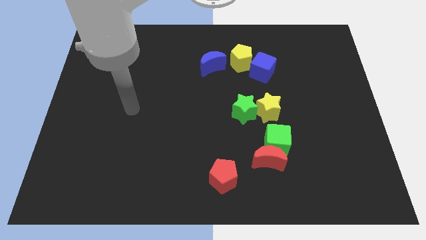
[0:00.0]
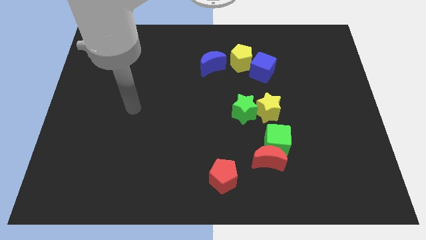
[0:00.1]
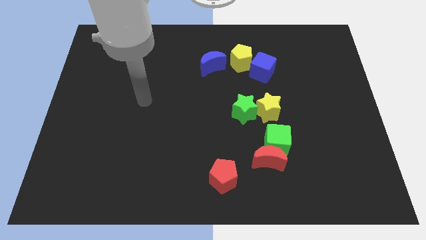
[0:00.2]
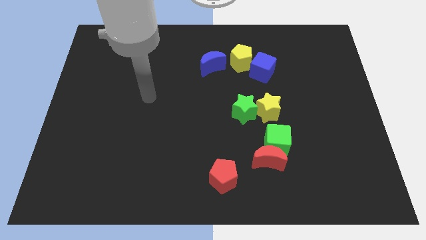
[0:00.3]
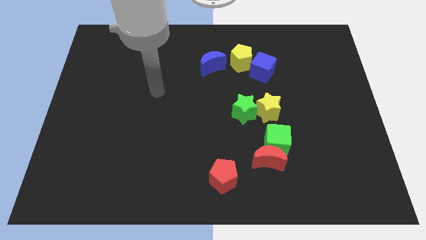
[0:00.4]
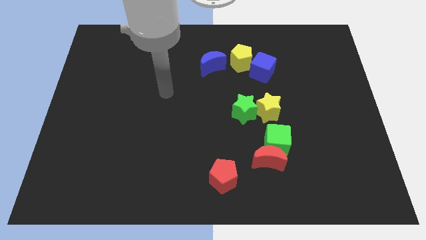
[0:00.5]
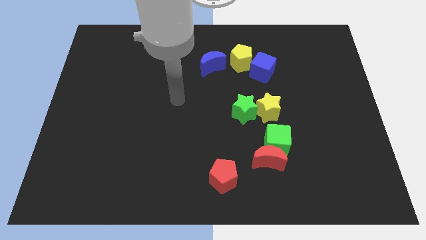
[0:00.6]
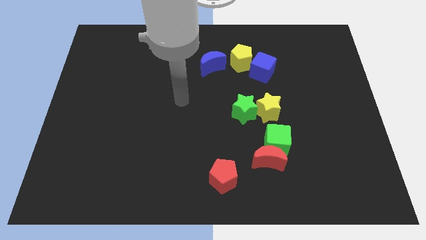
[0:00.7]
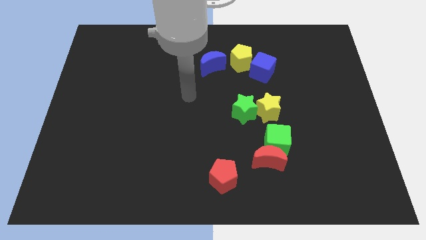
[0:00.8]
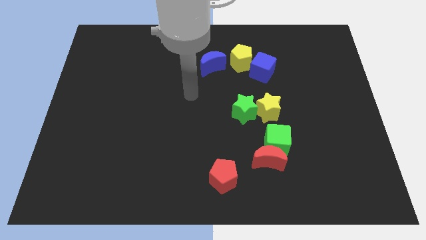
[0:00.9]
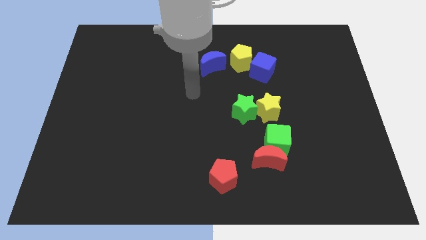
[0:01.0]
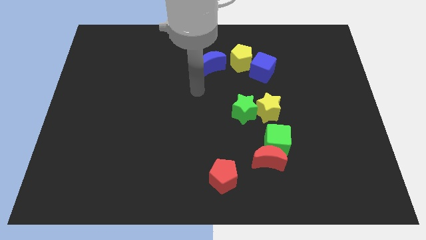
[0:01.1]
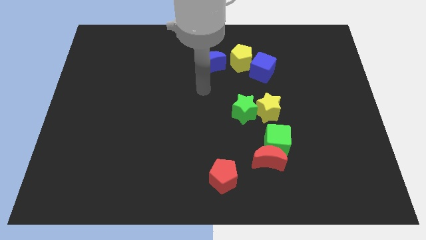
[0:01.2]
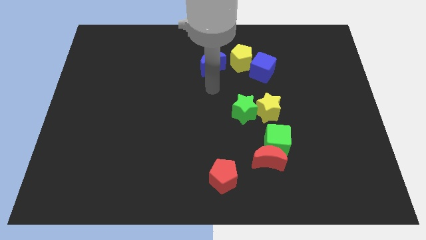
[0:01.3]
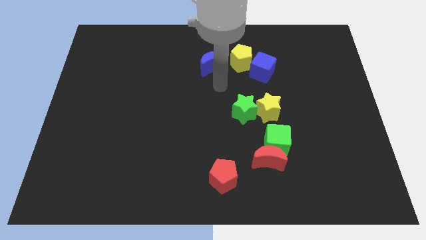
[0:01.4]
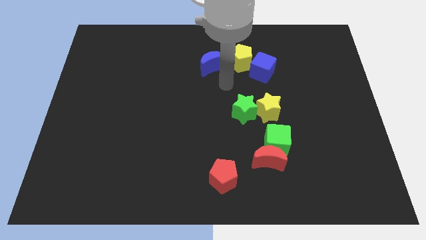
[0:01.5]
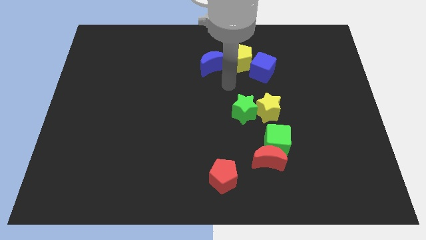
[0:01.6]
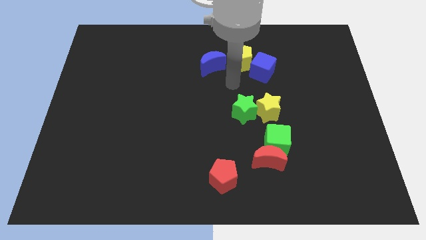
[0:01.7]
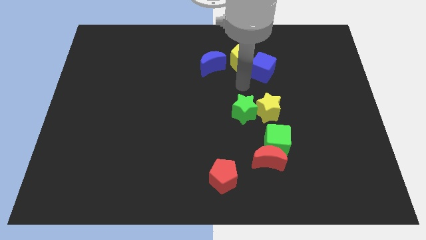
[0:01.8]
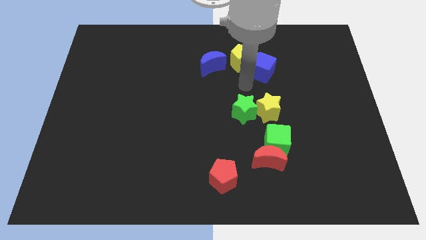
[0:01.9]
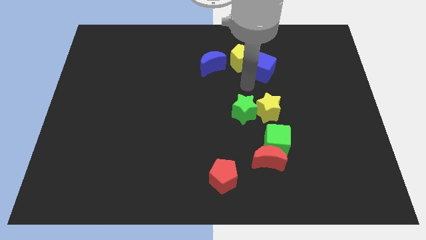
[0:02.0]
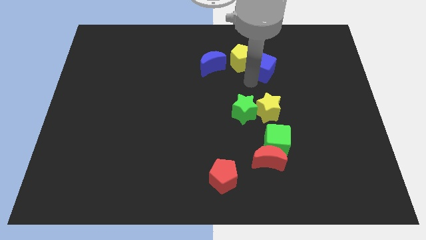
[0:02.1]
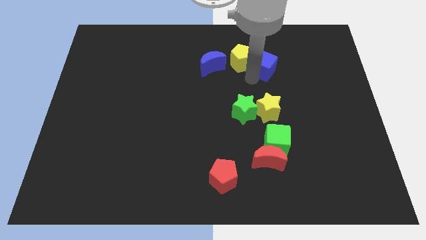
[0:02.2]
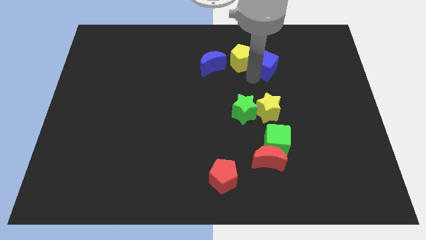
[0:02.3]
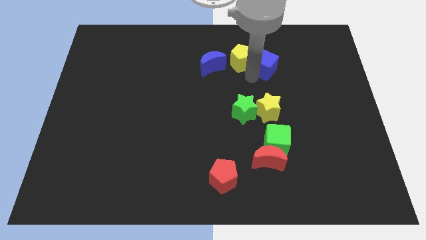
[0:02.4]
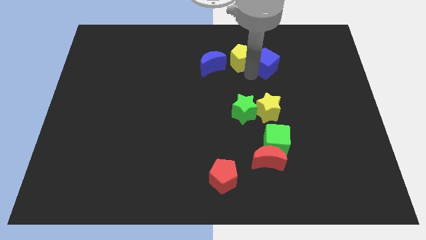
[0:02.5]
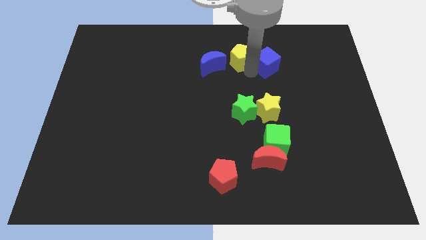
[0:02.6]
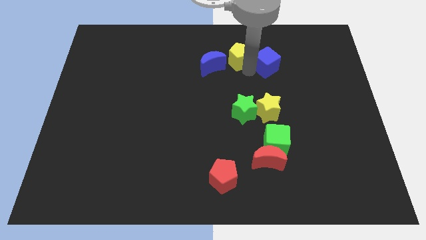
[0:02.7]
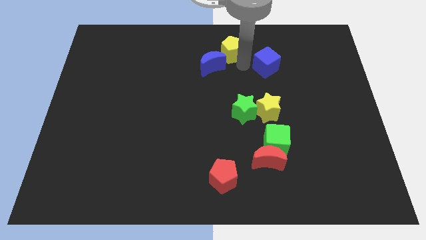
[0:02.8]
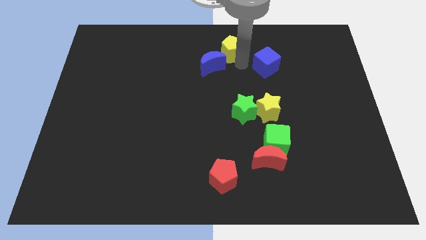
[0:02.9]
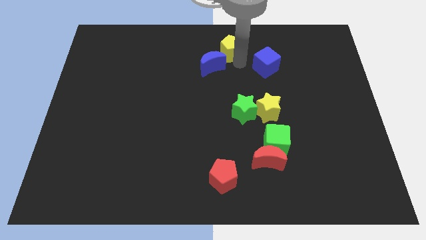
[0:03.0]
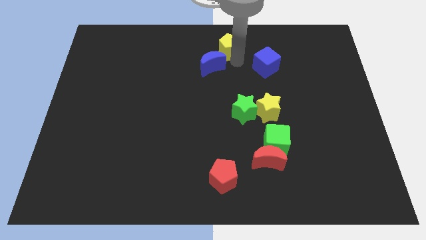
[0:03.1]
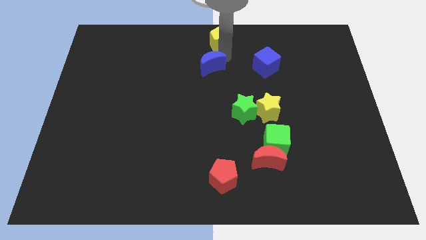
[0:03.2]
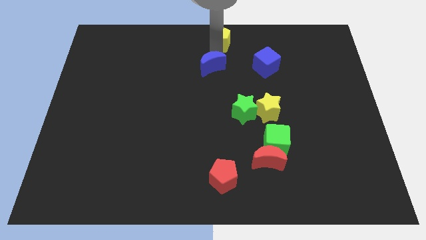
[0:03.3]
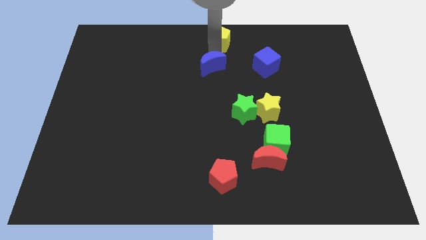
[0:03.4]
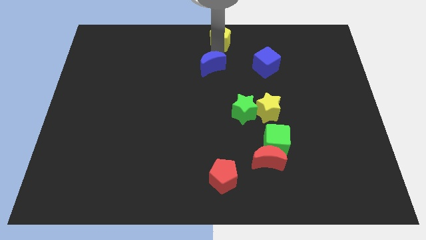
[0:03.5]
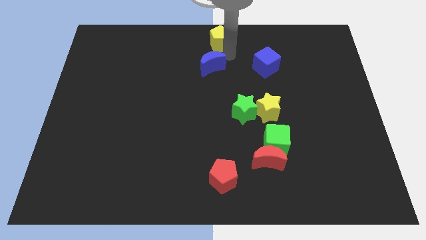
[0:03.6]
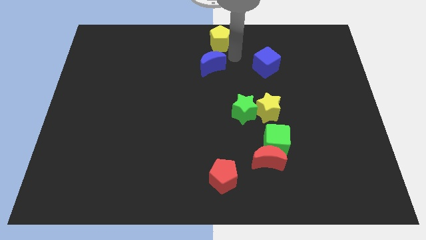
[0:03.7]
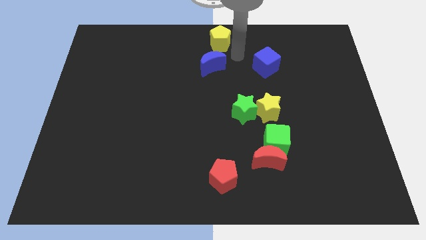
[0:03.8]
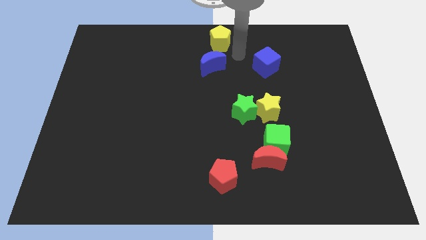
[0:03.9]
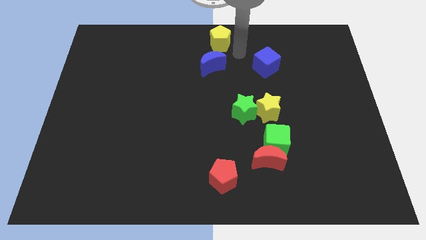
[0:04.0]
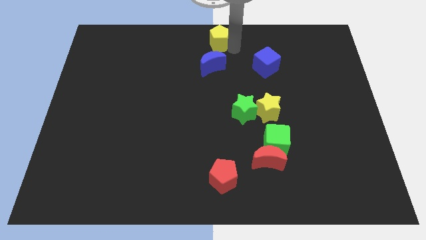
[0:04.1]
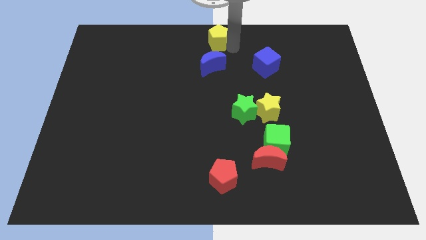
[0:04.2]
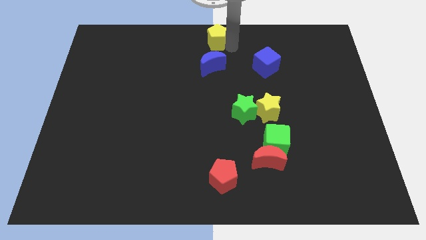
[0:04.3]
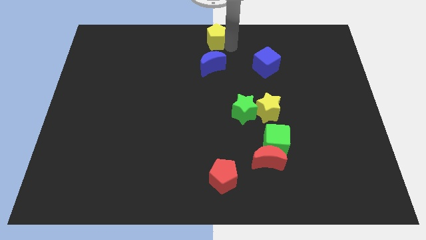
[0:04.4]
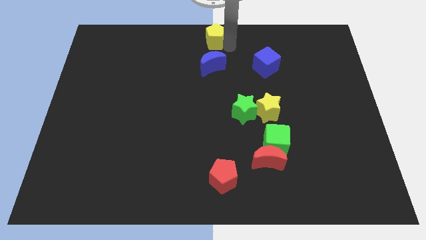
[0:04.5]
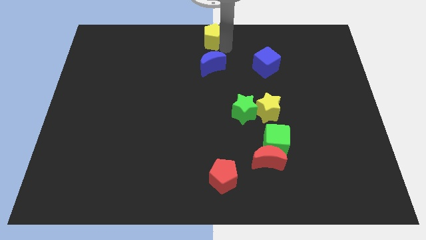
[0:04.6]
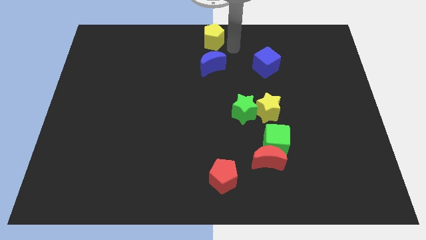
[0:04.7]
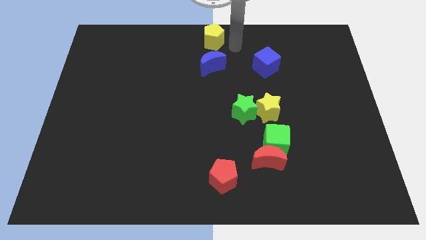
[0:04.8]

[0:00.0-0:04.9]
place the yellow pentagon above the blue crescent

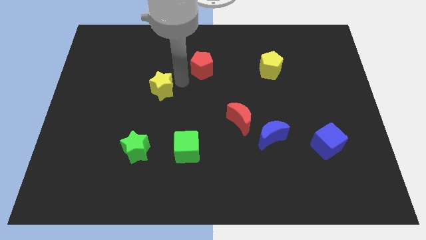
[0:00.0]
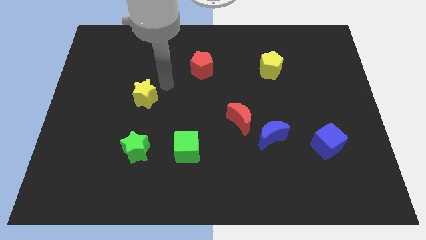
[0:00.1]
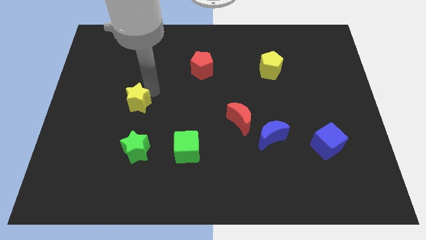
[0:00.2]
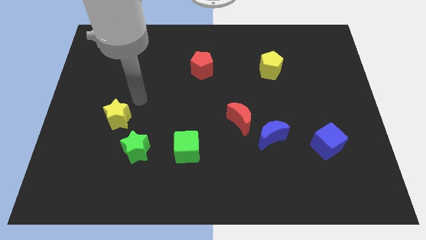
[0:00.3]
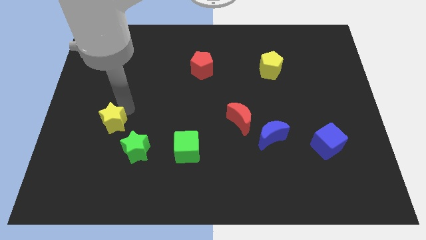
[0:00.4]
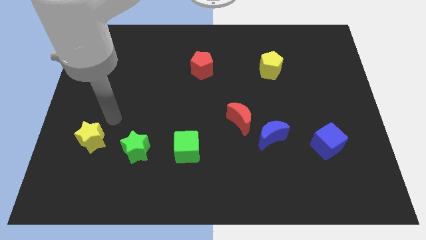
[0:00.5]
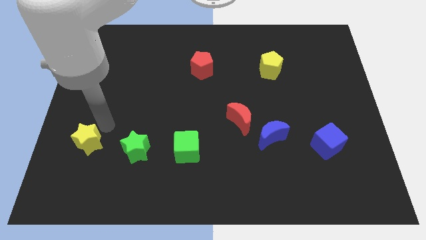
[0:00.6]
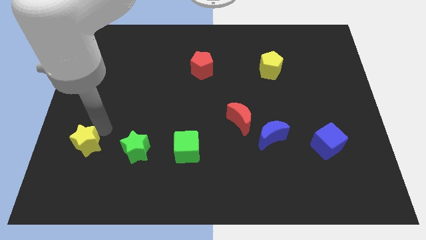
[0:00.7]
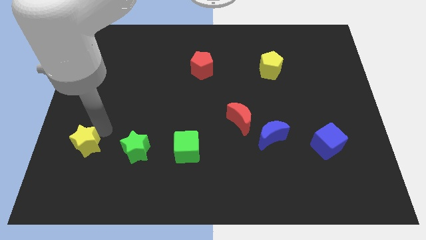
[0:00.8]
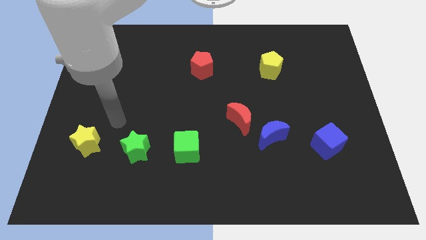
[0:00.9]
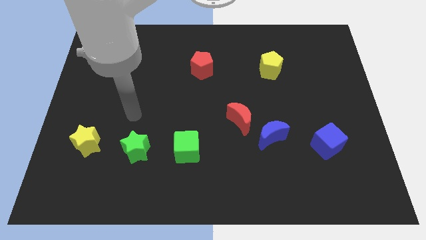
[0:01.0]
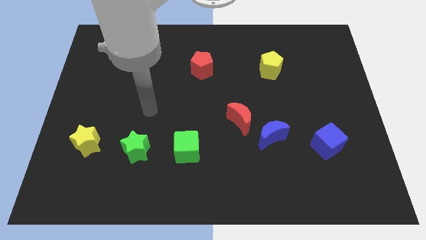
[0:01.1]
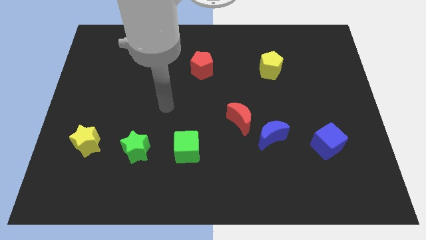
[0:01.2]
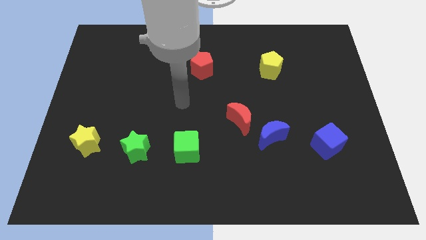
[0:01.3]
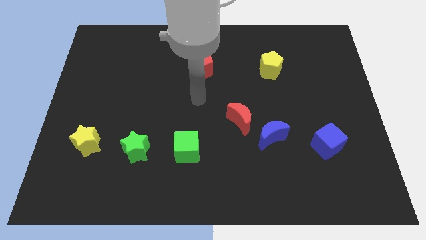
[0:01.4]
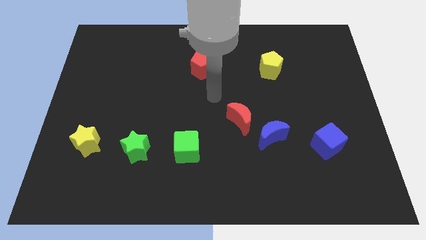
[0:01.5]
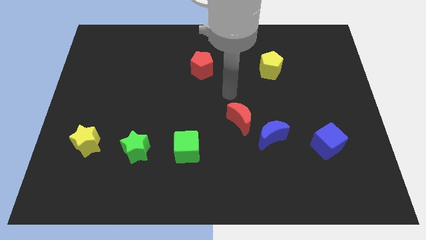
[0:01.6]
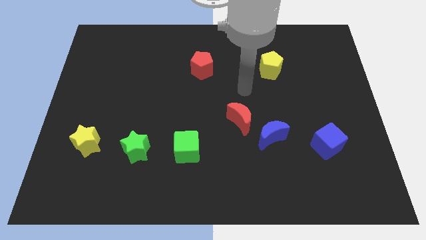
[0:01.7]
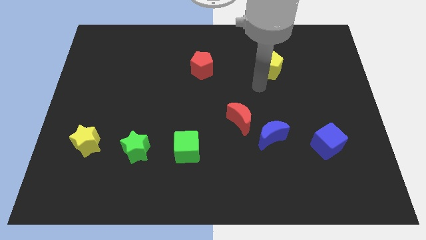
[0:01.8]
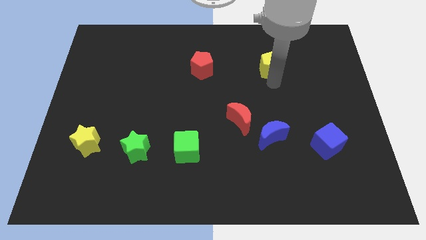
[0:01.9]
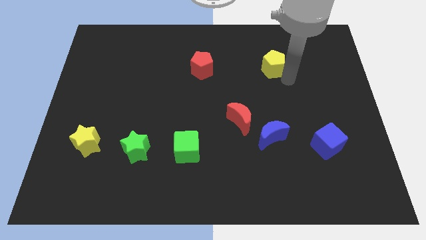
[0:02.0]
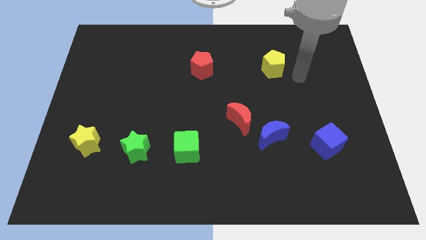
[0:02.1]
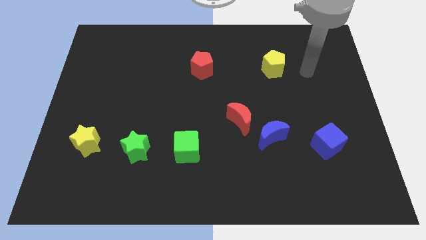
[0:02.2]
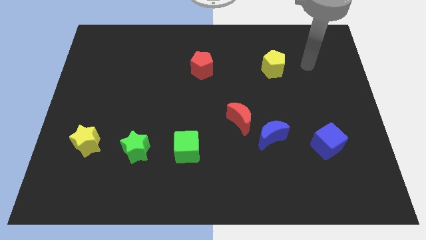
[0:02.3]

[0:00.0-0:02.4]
move the yellow star to the left side of the green star

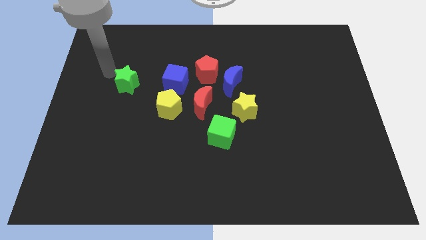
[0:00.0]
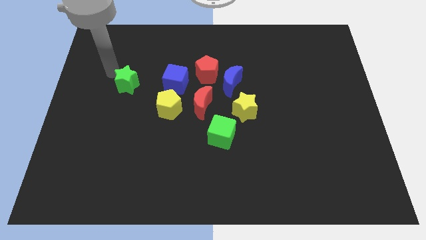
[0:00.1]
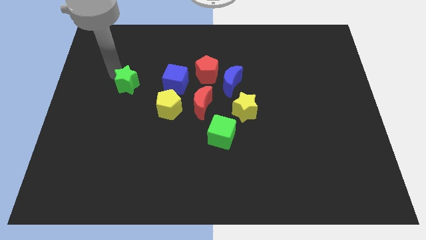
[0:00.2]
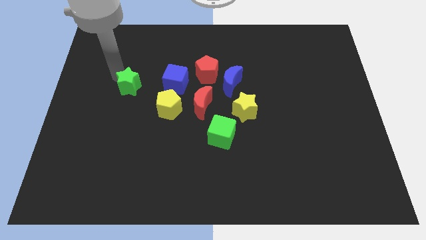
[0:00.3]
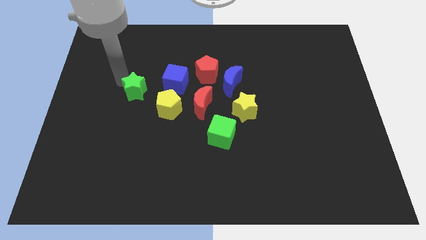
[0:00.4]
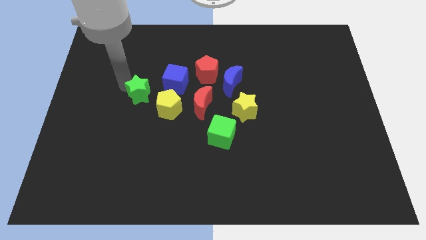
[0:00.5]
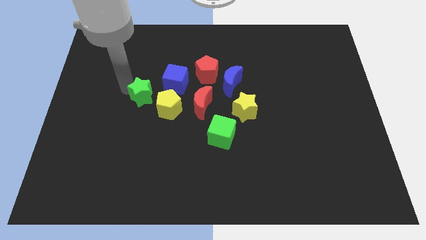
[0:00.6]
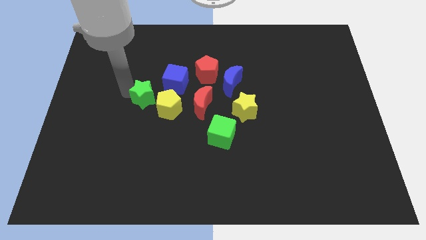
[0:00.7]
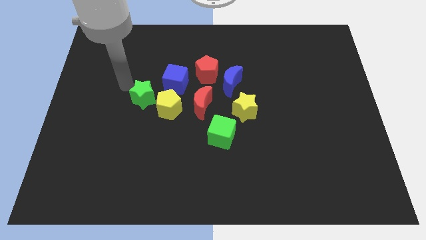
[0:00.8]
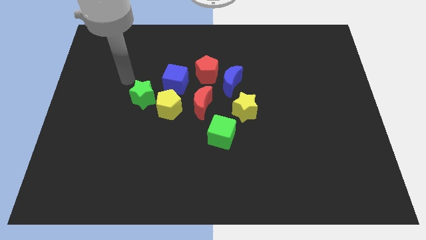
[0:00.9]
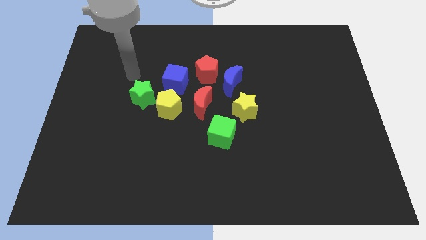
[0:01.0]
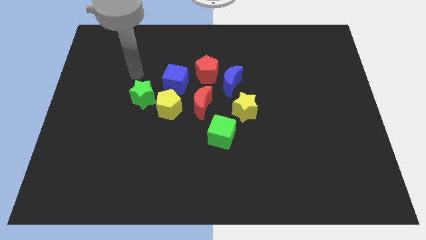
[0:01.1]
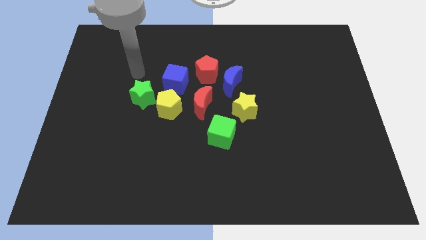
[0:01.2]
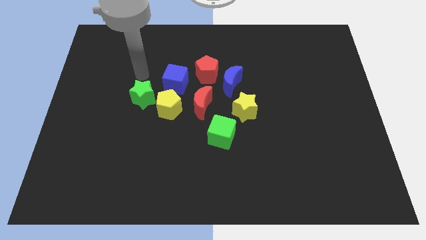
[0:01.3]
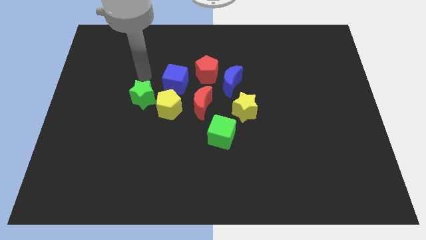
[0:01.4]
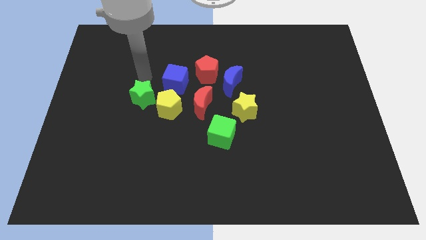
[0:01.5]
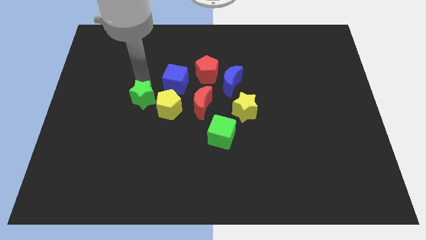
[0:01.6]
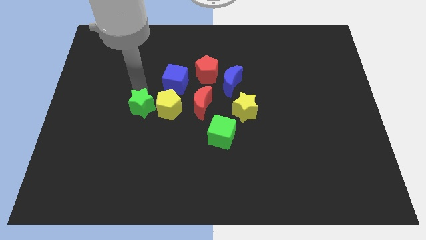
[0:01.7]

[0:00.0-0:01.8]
slide the green star to the left of yellow pentagon
